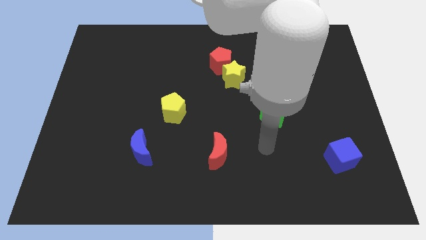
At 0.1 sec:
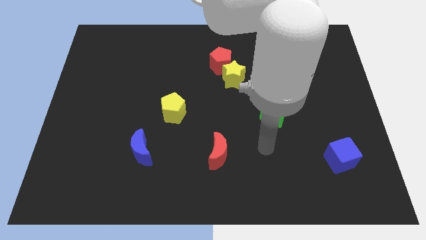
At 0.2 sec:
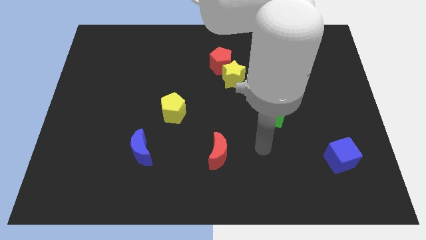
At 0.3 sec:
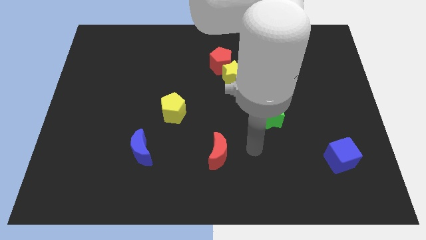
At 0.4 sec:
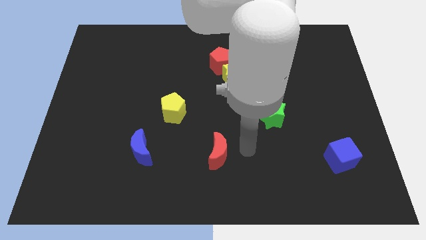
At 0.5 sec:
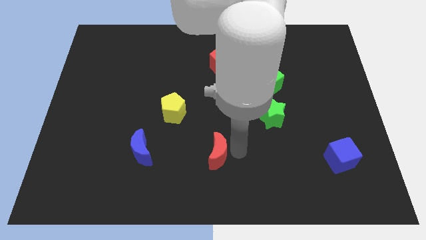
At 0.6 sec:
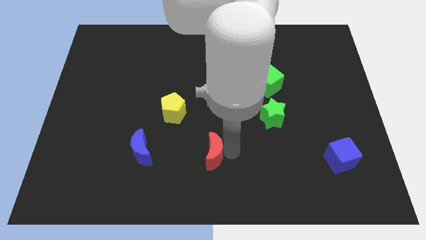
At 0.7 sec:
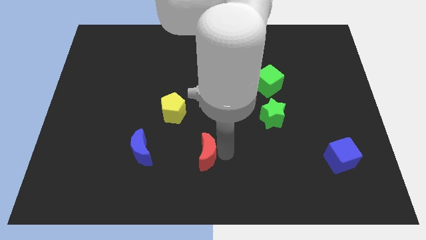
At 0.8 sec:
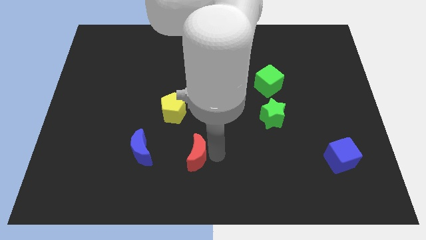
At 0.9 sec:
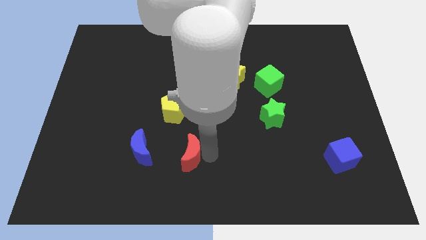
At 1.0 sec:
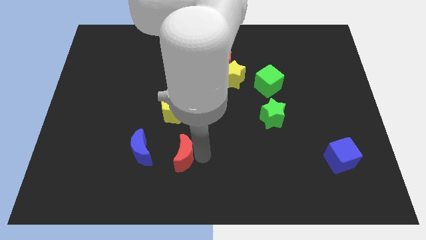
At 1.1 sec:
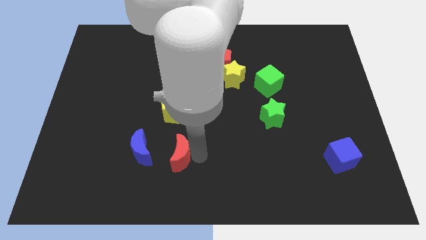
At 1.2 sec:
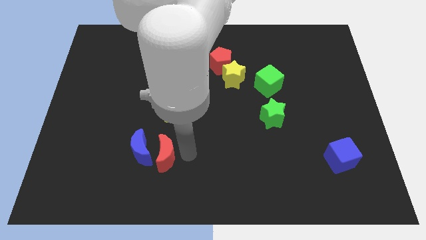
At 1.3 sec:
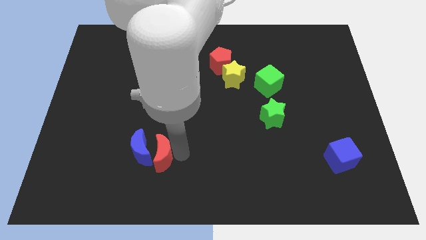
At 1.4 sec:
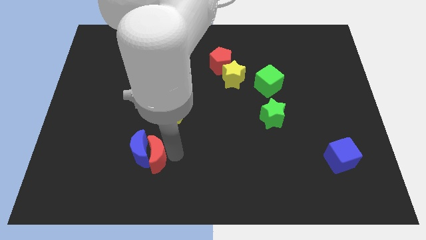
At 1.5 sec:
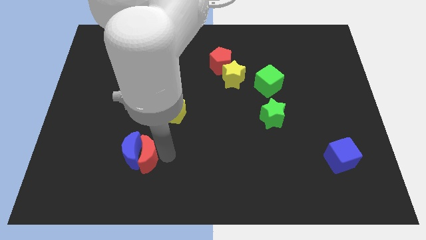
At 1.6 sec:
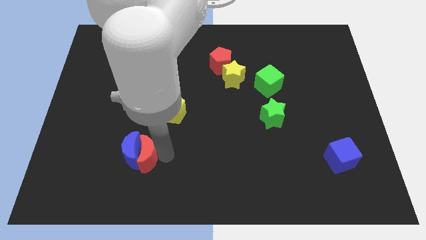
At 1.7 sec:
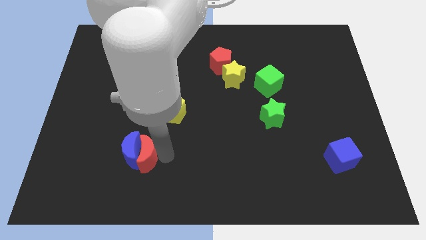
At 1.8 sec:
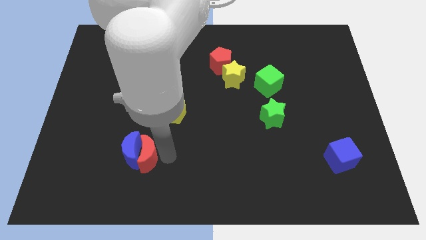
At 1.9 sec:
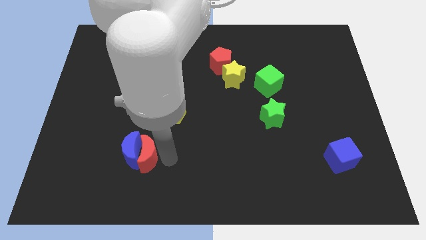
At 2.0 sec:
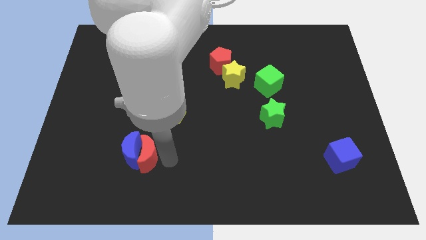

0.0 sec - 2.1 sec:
move the red crescent into the right of the blue crescent

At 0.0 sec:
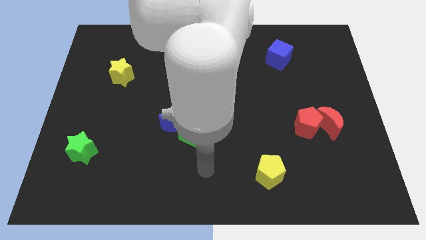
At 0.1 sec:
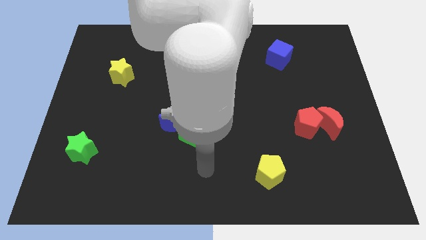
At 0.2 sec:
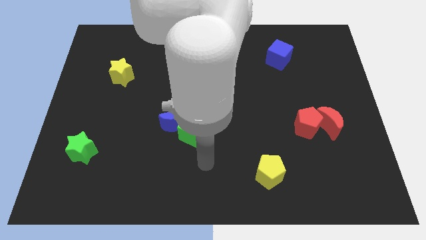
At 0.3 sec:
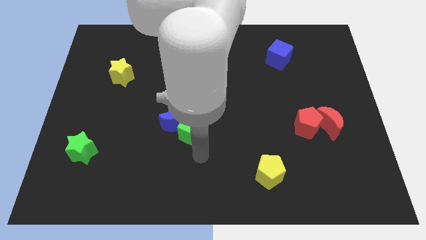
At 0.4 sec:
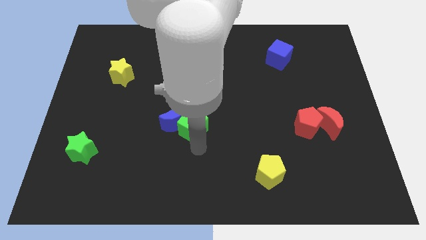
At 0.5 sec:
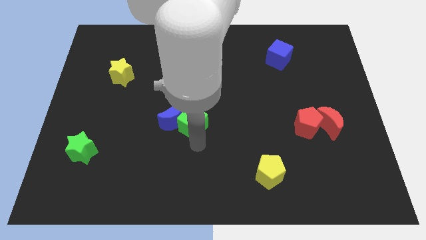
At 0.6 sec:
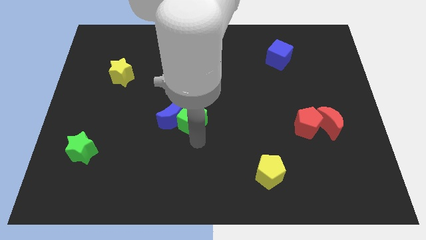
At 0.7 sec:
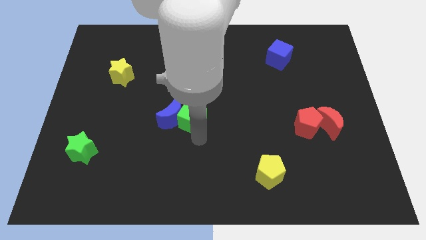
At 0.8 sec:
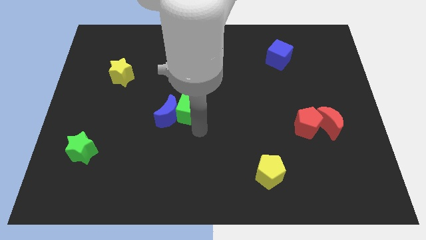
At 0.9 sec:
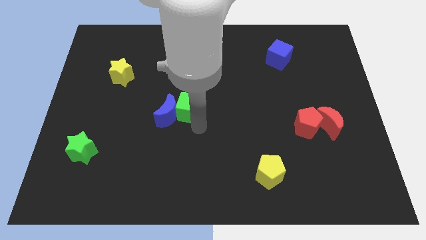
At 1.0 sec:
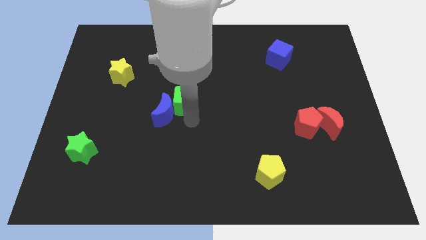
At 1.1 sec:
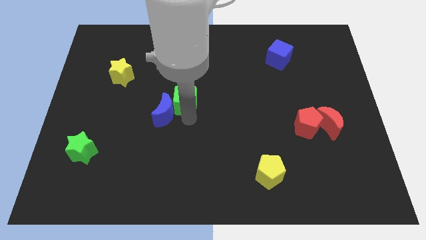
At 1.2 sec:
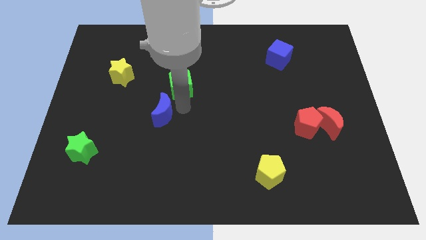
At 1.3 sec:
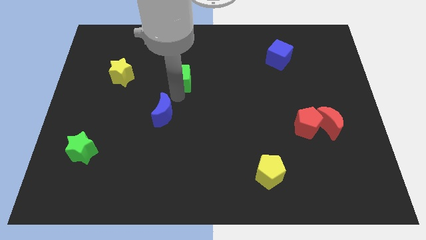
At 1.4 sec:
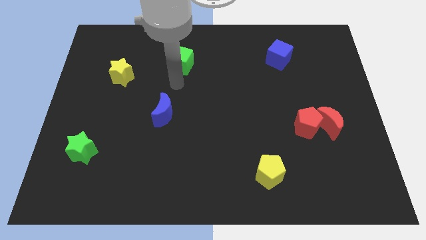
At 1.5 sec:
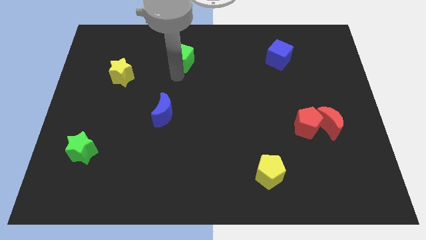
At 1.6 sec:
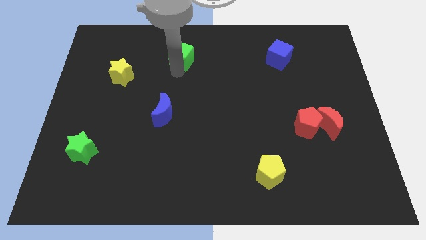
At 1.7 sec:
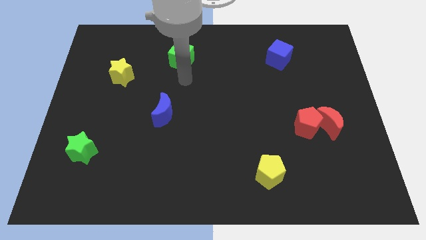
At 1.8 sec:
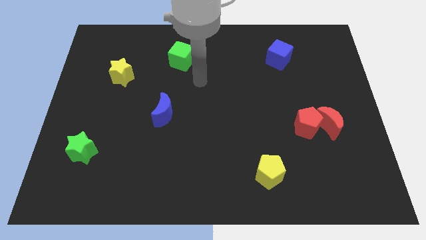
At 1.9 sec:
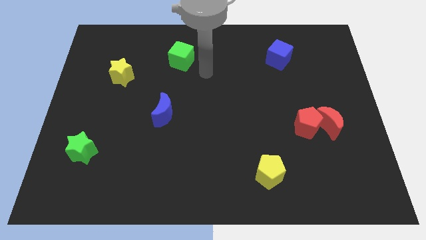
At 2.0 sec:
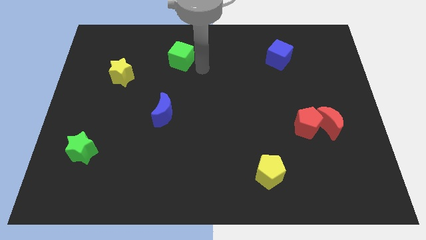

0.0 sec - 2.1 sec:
slide the green cube towards the top

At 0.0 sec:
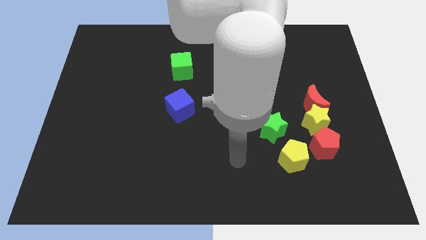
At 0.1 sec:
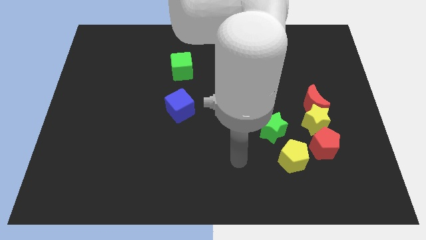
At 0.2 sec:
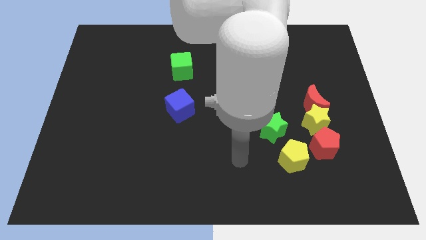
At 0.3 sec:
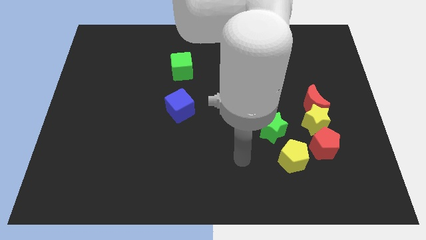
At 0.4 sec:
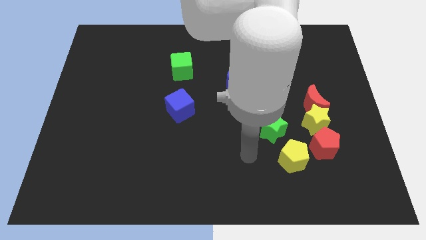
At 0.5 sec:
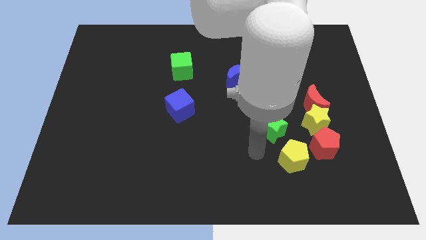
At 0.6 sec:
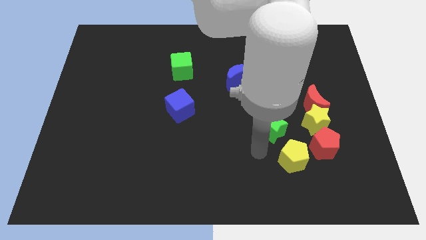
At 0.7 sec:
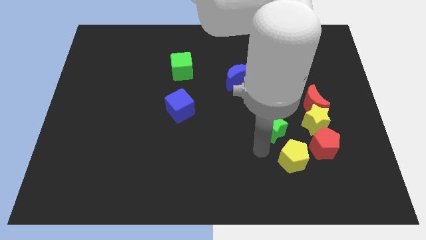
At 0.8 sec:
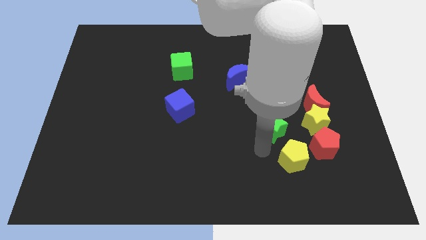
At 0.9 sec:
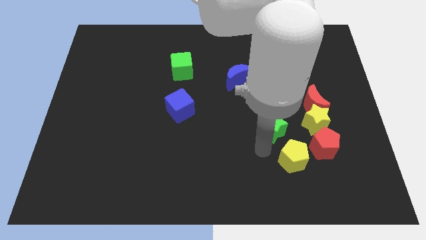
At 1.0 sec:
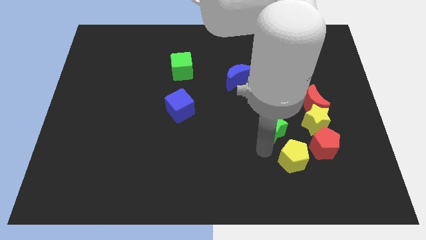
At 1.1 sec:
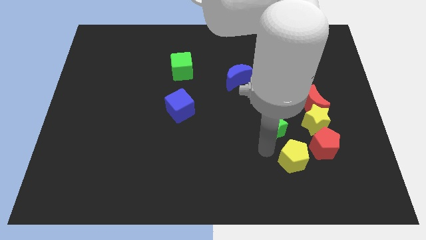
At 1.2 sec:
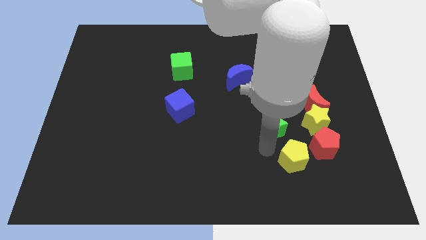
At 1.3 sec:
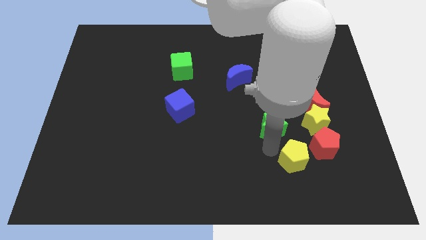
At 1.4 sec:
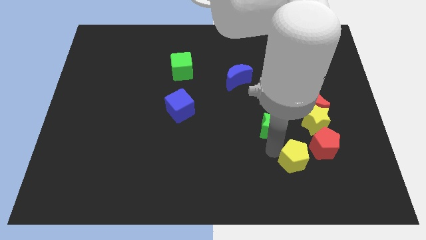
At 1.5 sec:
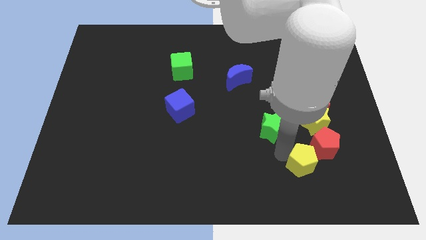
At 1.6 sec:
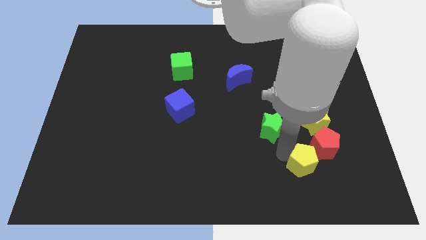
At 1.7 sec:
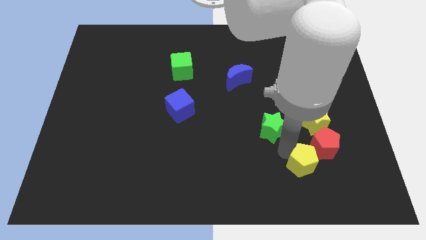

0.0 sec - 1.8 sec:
move the yellow pentagon slightly to the bottom right of the board

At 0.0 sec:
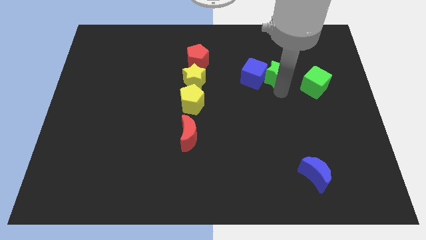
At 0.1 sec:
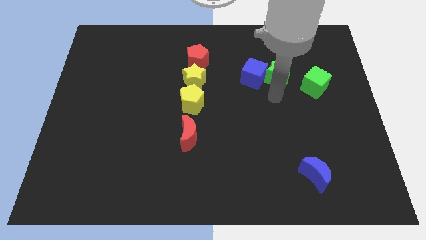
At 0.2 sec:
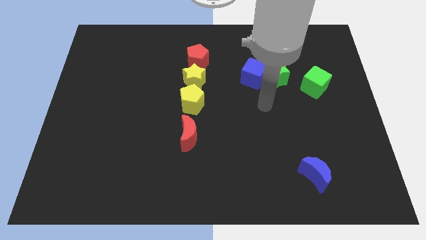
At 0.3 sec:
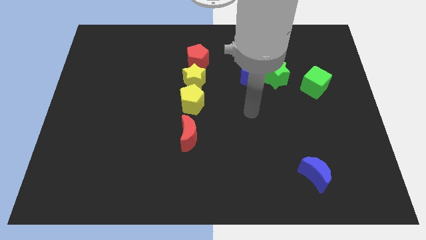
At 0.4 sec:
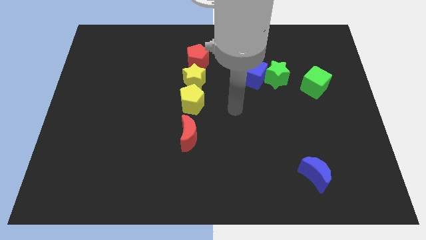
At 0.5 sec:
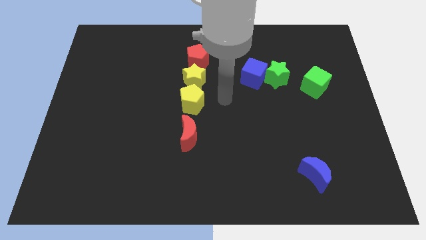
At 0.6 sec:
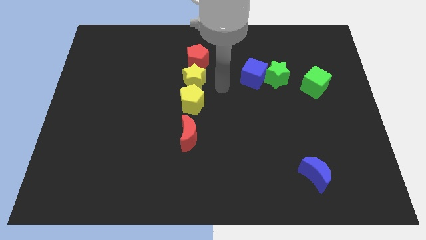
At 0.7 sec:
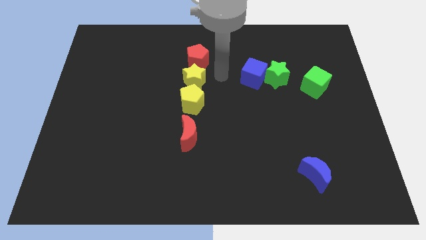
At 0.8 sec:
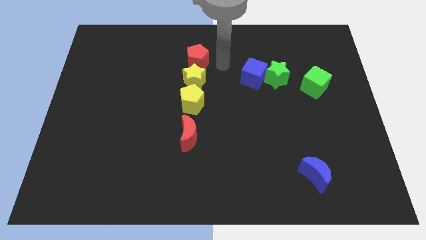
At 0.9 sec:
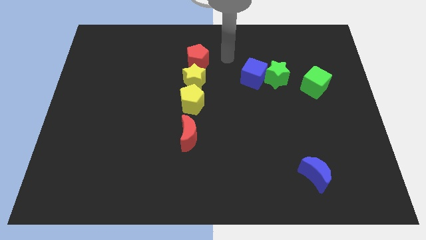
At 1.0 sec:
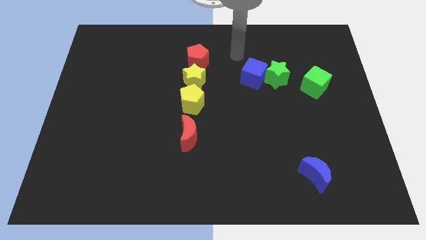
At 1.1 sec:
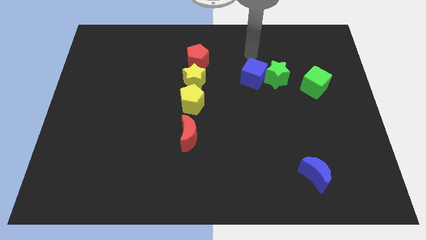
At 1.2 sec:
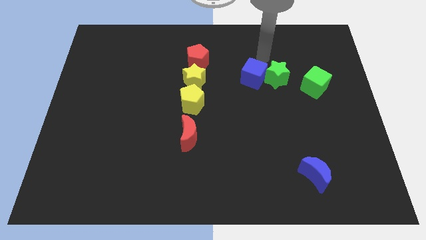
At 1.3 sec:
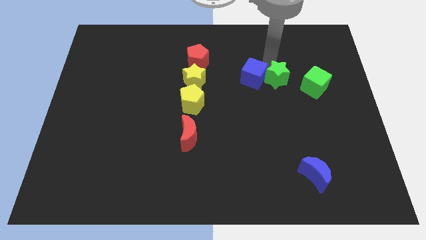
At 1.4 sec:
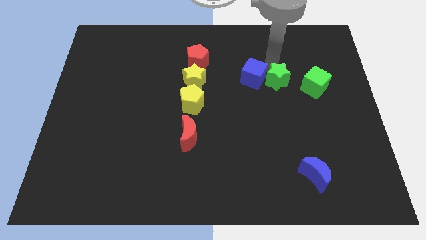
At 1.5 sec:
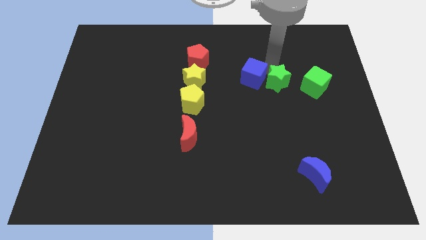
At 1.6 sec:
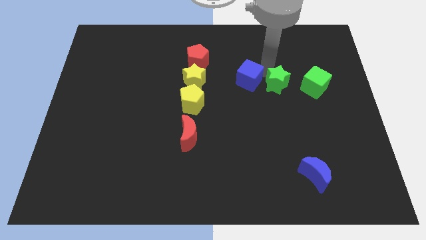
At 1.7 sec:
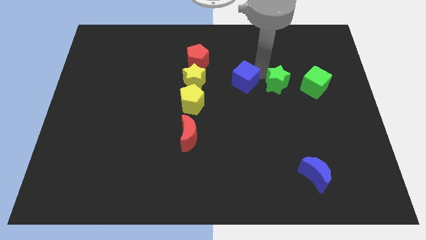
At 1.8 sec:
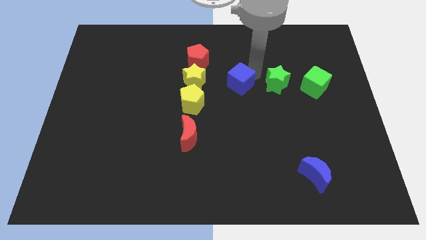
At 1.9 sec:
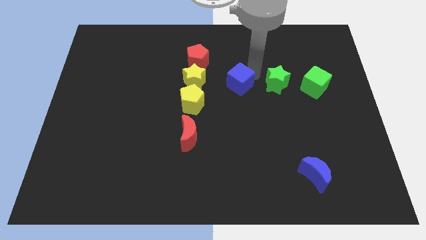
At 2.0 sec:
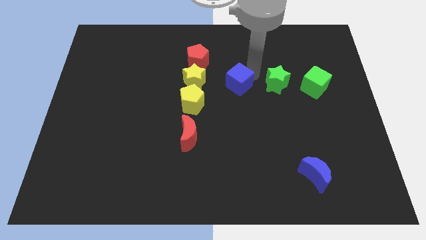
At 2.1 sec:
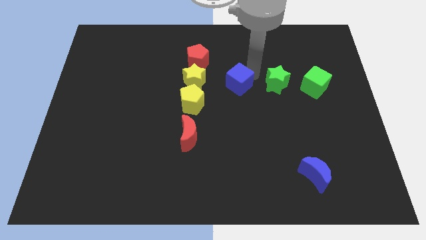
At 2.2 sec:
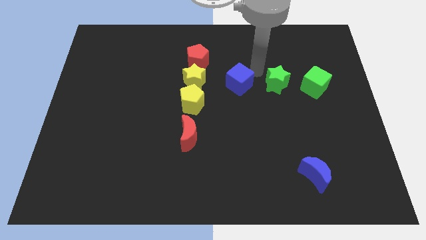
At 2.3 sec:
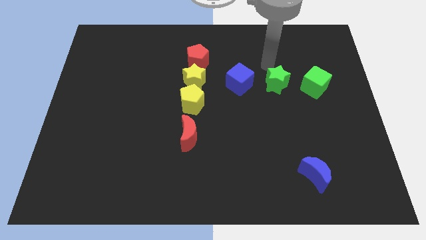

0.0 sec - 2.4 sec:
separate the blue moon and the green star

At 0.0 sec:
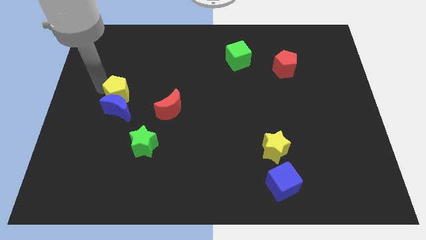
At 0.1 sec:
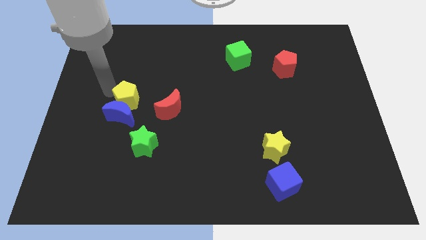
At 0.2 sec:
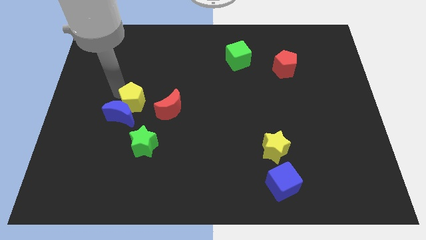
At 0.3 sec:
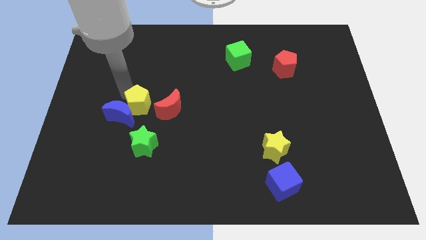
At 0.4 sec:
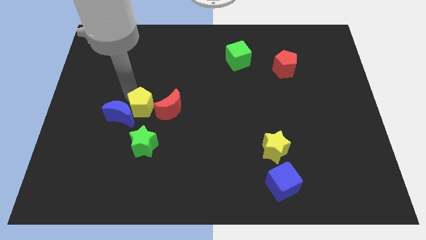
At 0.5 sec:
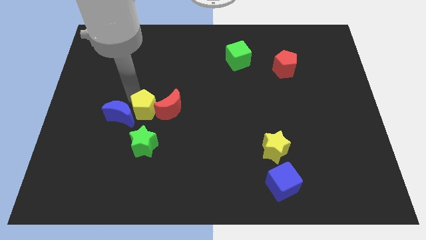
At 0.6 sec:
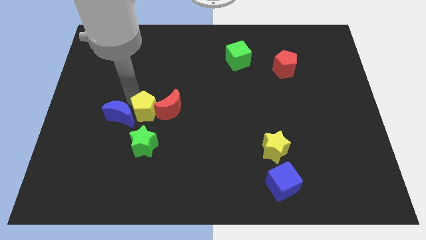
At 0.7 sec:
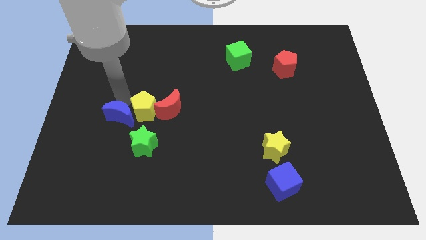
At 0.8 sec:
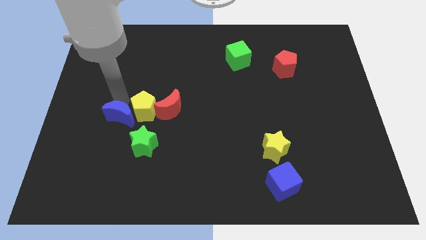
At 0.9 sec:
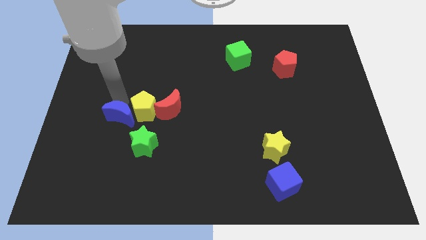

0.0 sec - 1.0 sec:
move the yellow pentagon to the red crescent
